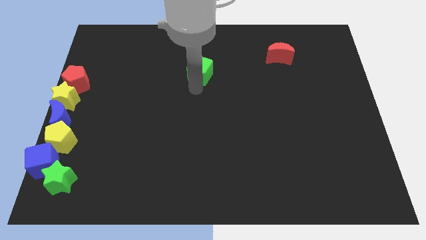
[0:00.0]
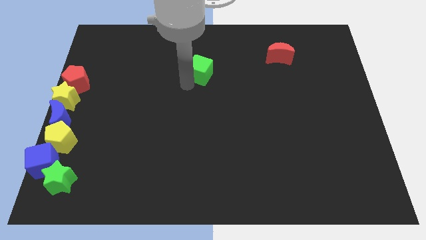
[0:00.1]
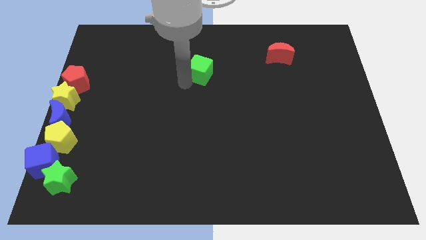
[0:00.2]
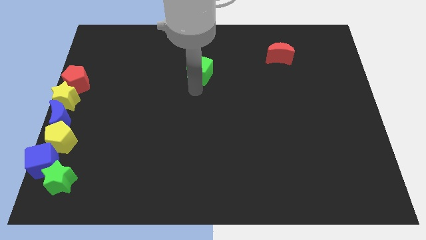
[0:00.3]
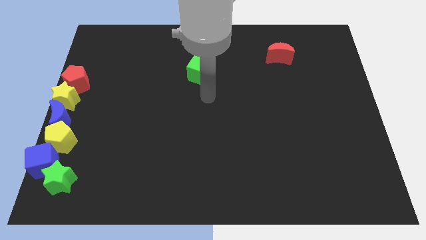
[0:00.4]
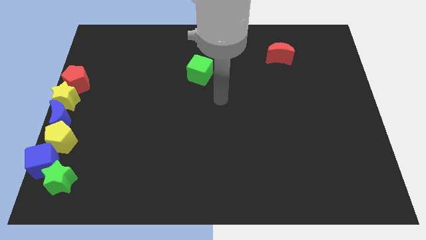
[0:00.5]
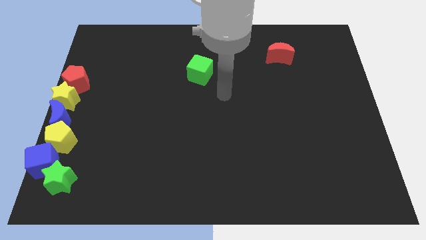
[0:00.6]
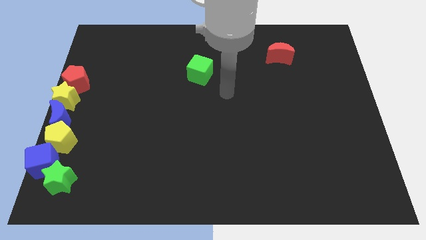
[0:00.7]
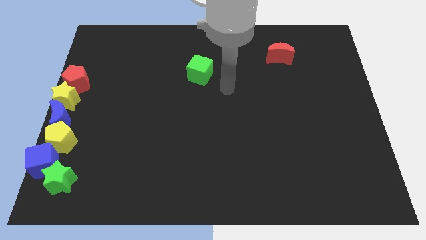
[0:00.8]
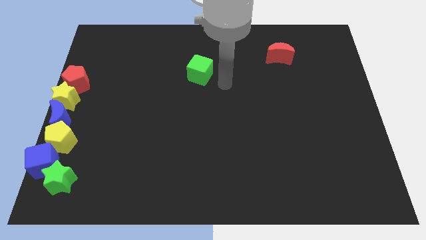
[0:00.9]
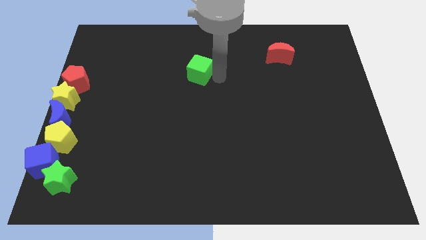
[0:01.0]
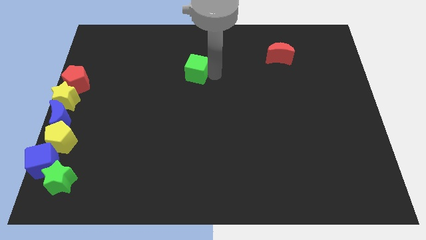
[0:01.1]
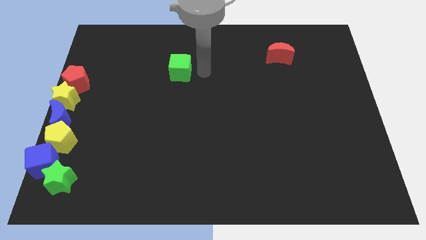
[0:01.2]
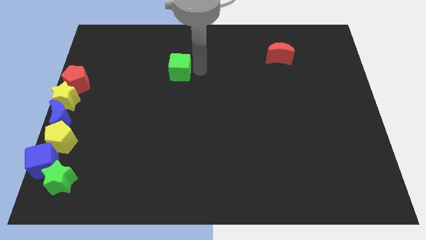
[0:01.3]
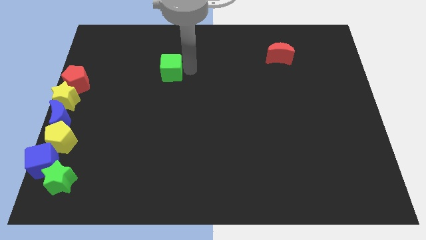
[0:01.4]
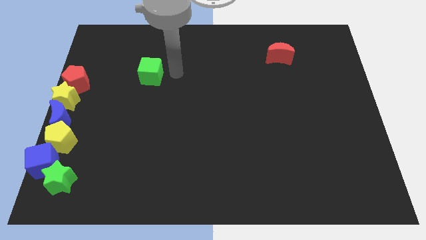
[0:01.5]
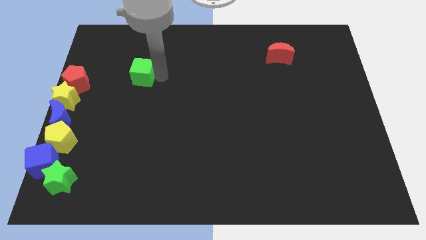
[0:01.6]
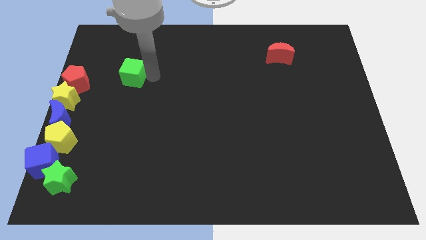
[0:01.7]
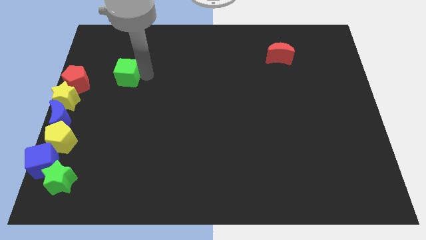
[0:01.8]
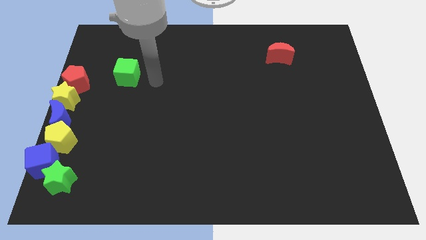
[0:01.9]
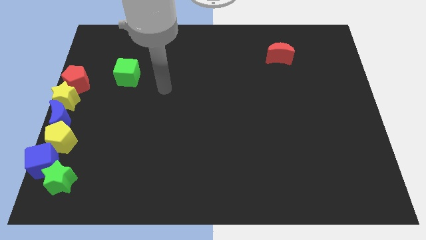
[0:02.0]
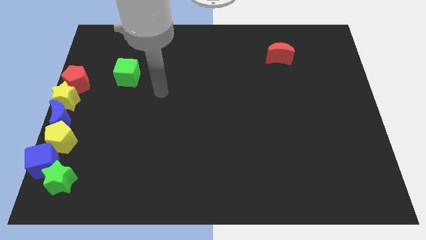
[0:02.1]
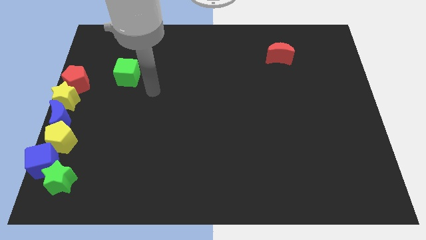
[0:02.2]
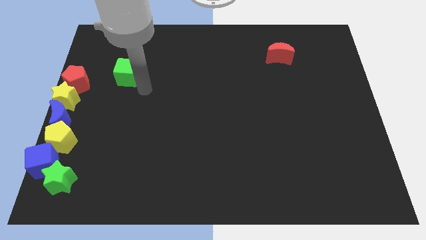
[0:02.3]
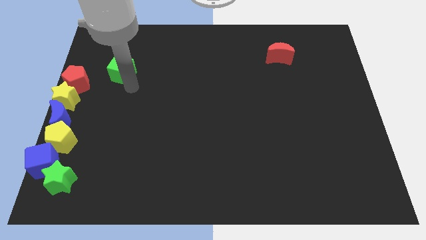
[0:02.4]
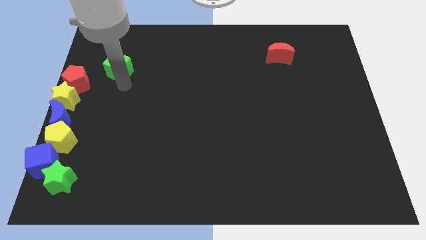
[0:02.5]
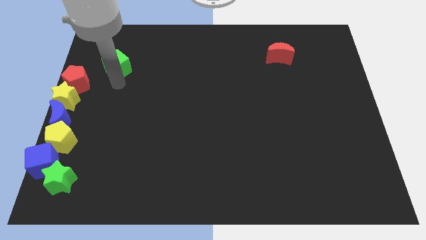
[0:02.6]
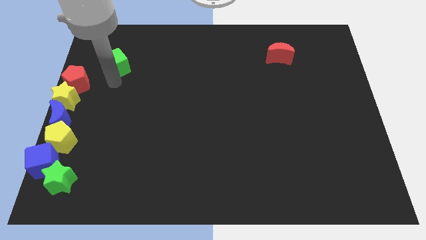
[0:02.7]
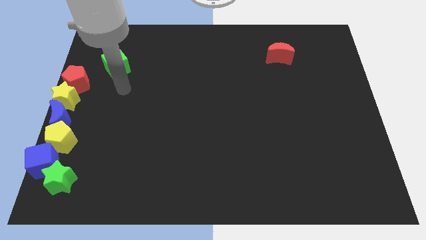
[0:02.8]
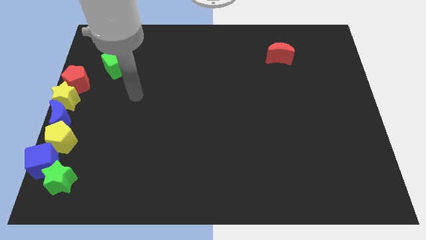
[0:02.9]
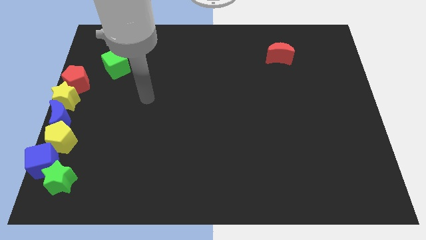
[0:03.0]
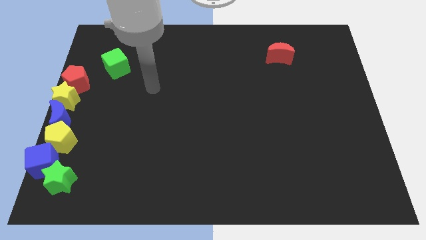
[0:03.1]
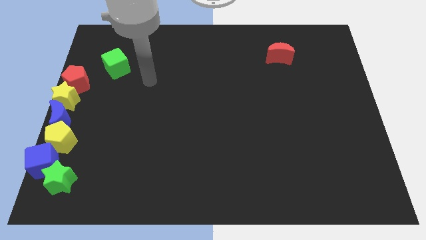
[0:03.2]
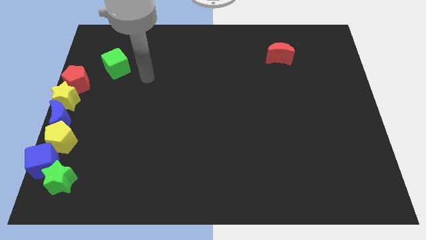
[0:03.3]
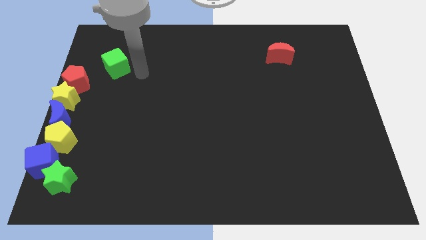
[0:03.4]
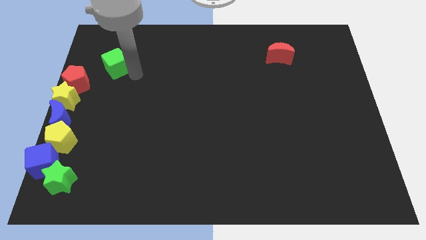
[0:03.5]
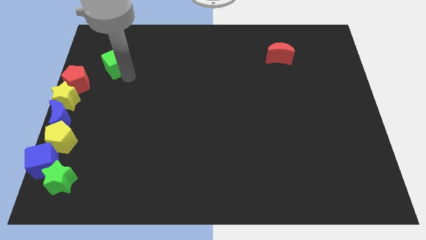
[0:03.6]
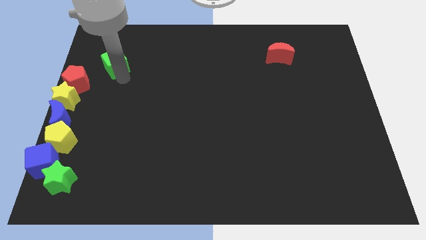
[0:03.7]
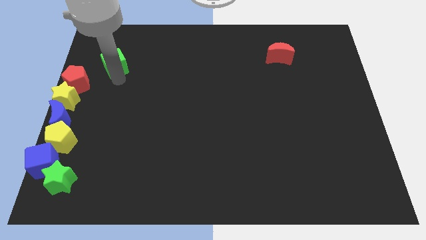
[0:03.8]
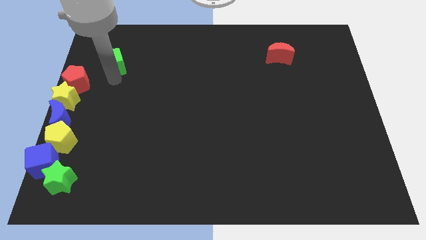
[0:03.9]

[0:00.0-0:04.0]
move the green cube to the top right side of red pentagon

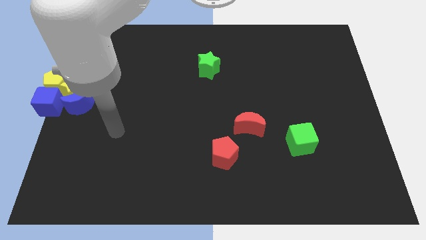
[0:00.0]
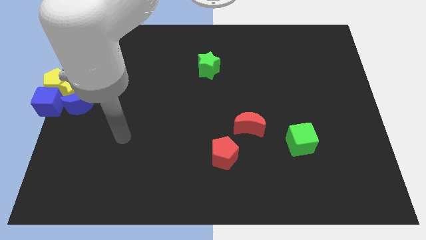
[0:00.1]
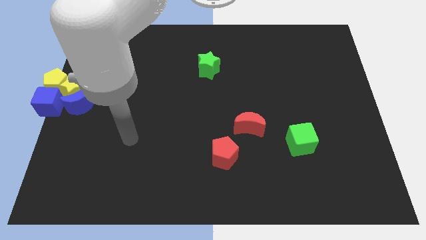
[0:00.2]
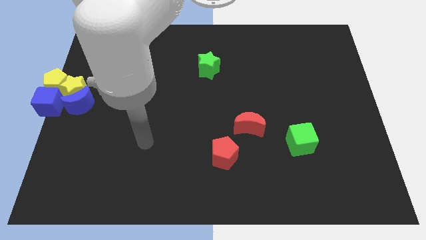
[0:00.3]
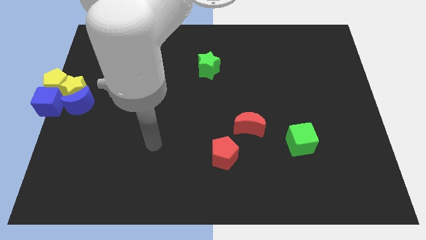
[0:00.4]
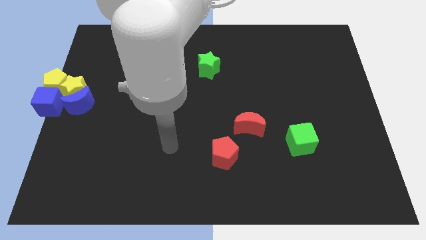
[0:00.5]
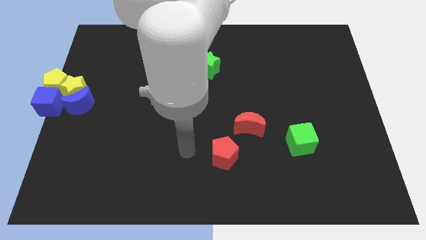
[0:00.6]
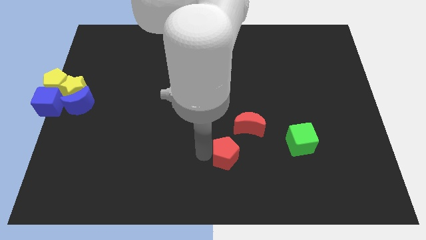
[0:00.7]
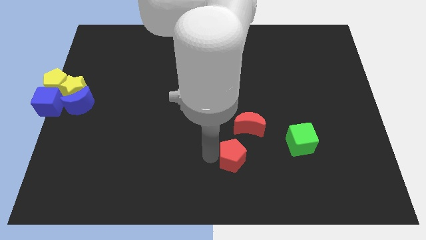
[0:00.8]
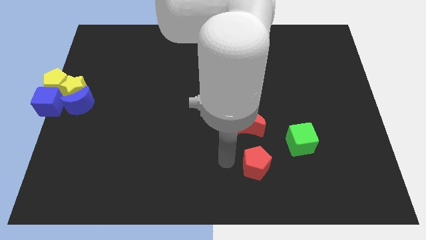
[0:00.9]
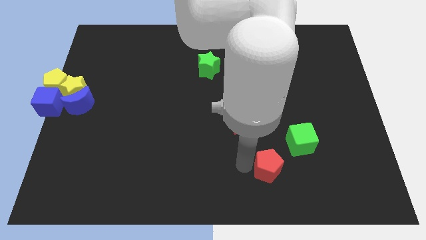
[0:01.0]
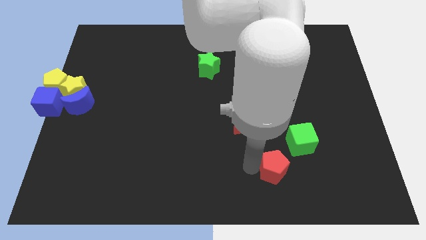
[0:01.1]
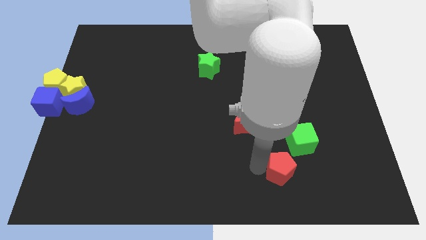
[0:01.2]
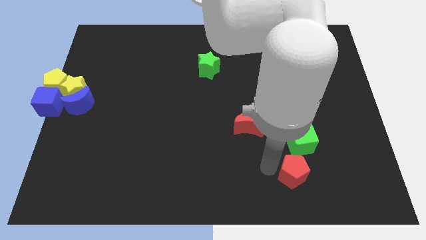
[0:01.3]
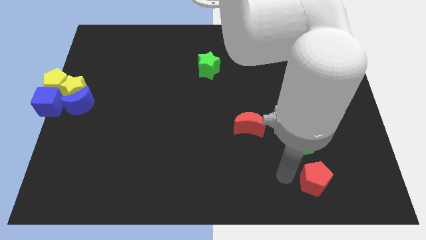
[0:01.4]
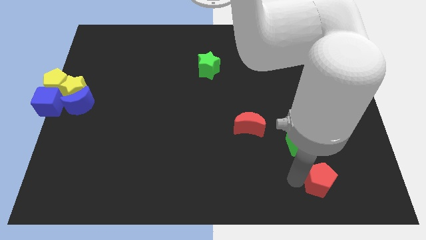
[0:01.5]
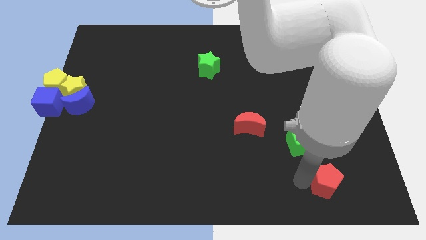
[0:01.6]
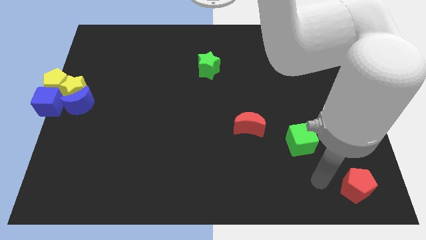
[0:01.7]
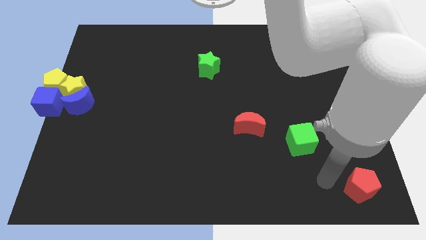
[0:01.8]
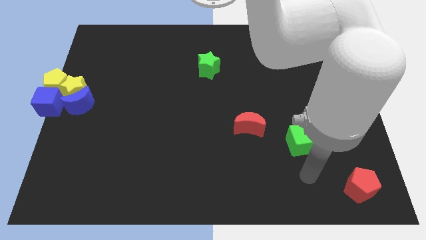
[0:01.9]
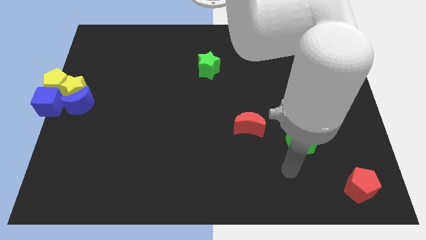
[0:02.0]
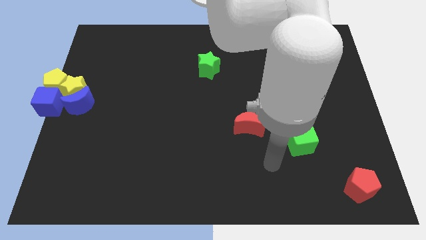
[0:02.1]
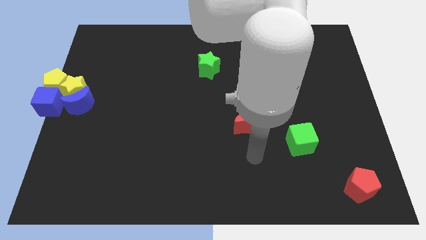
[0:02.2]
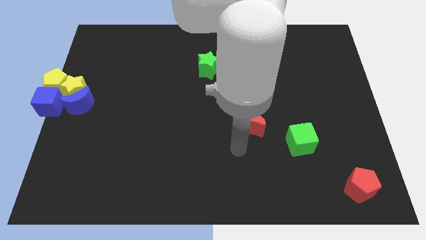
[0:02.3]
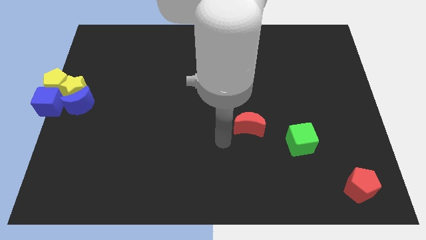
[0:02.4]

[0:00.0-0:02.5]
push the red pentagon to the bottom right corner

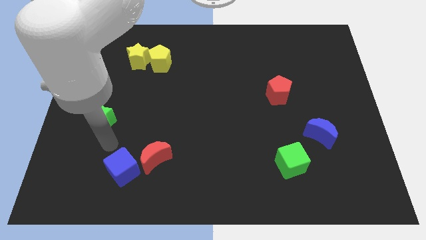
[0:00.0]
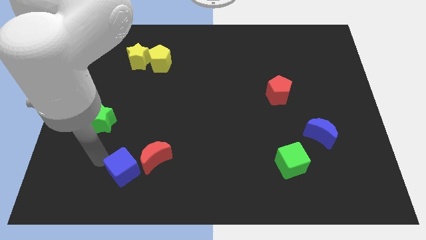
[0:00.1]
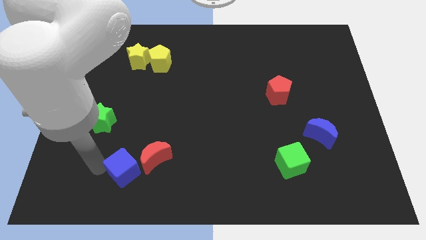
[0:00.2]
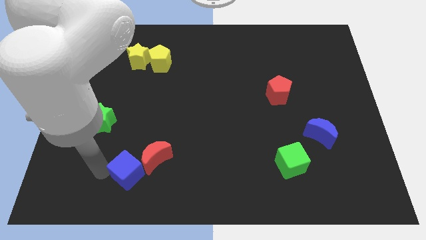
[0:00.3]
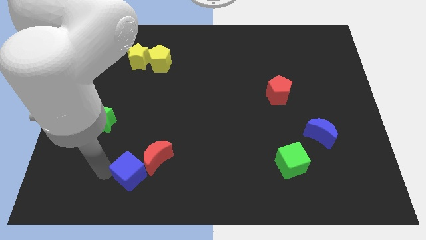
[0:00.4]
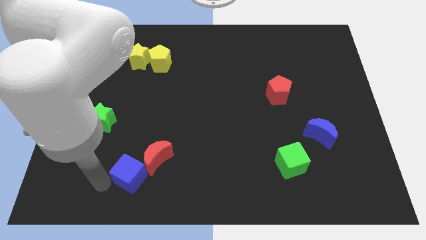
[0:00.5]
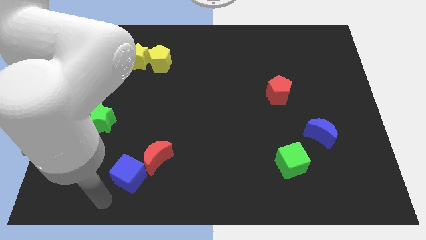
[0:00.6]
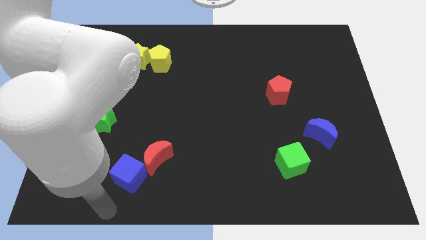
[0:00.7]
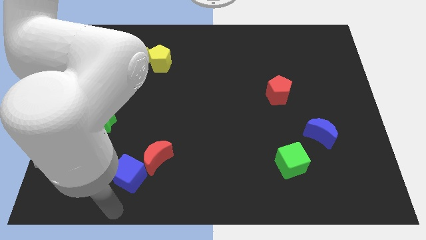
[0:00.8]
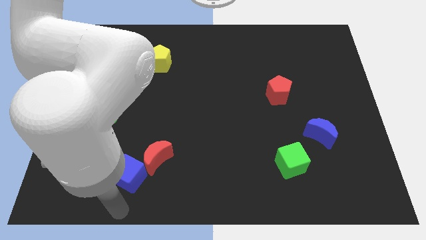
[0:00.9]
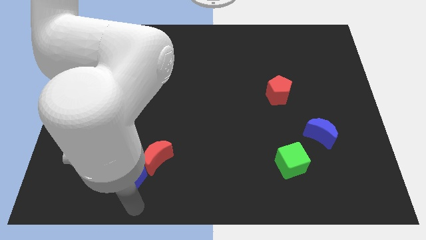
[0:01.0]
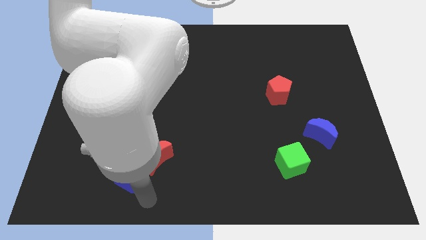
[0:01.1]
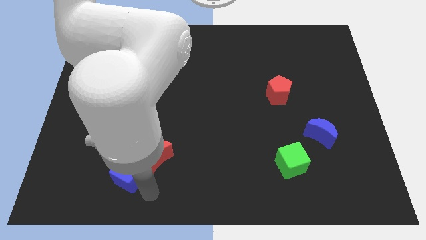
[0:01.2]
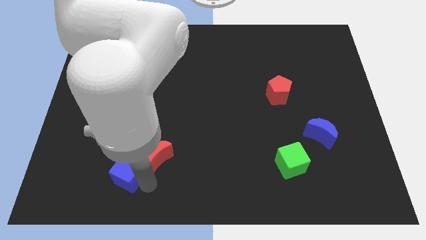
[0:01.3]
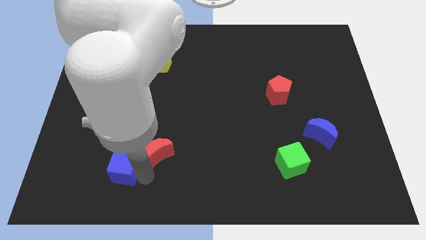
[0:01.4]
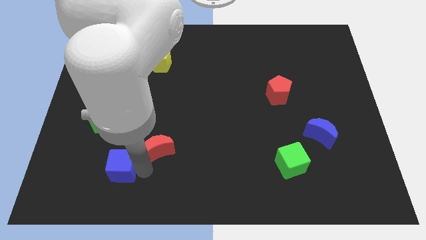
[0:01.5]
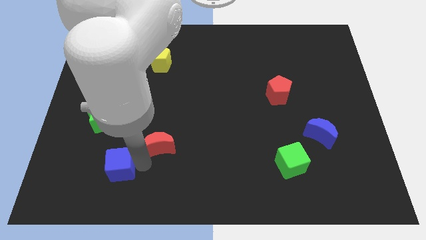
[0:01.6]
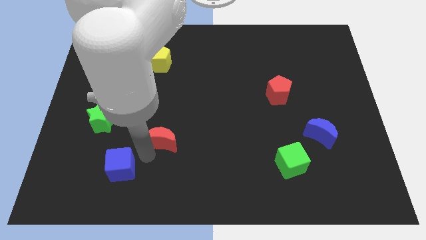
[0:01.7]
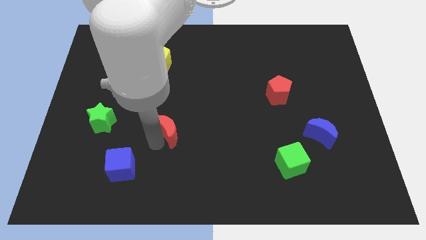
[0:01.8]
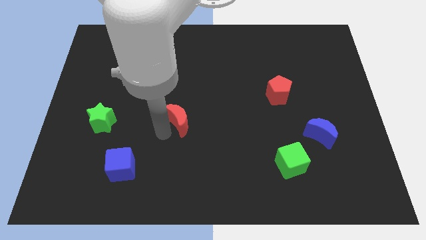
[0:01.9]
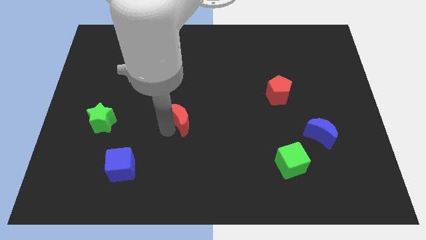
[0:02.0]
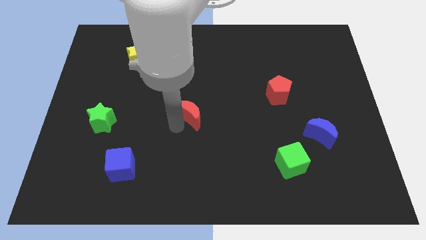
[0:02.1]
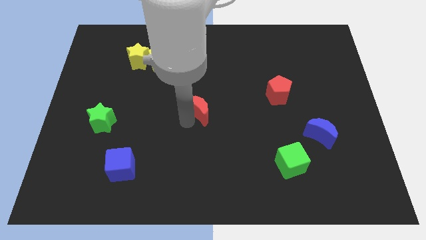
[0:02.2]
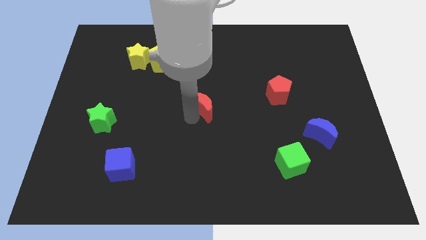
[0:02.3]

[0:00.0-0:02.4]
place the red moon to the middle of the board

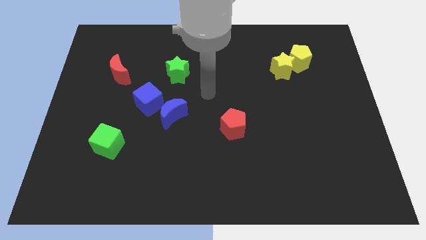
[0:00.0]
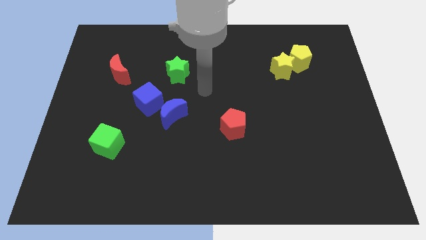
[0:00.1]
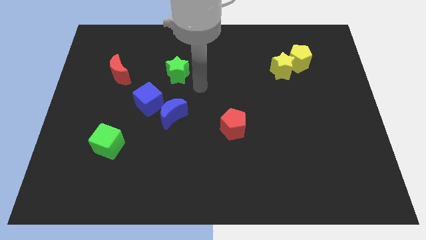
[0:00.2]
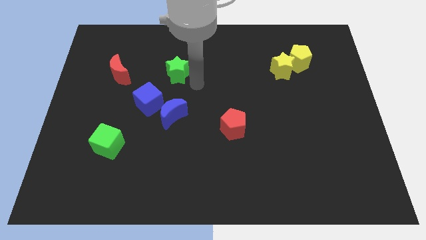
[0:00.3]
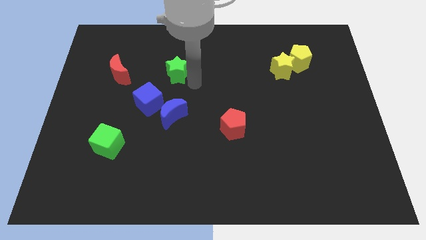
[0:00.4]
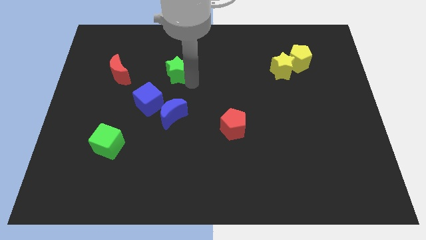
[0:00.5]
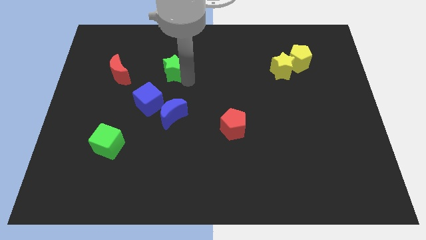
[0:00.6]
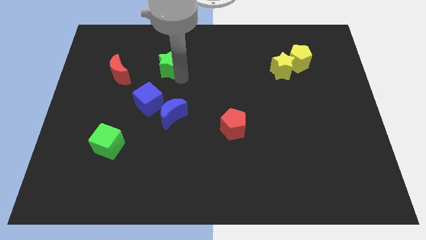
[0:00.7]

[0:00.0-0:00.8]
touch the bottom of green star
